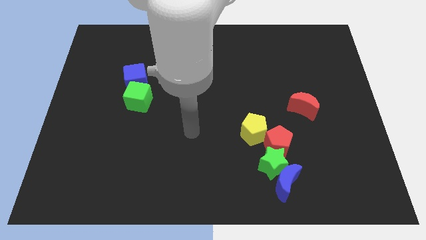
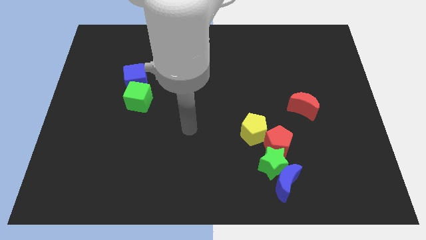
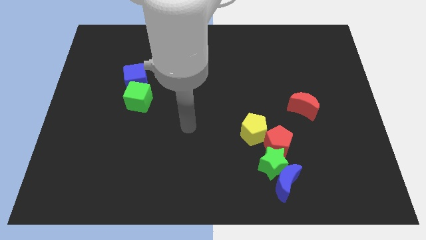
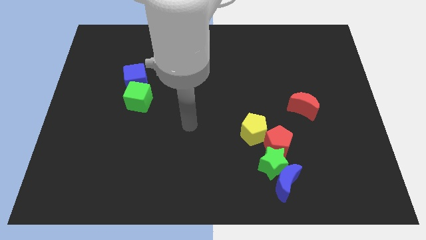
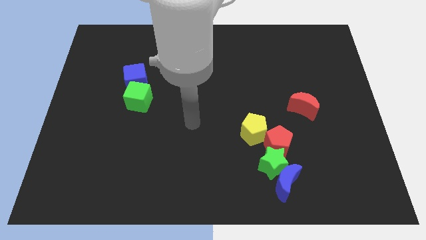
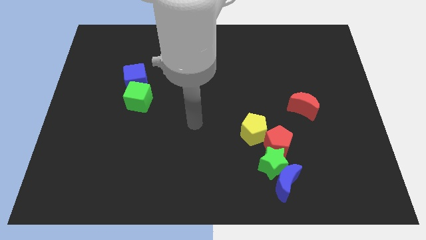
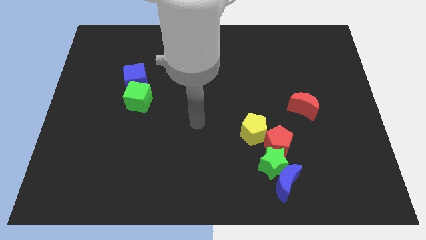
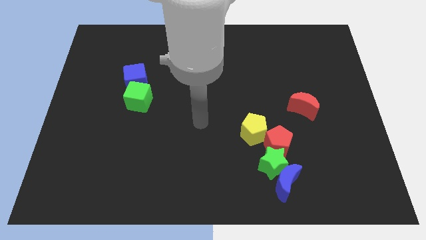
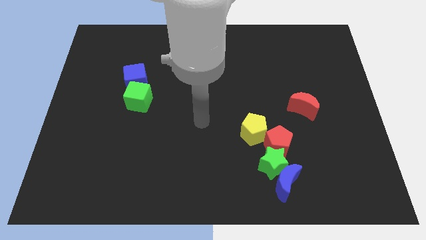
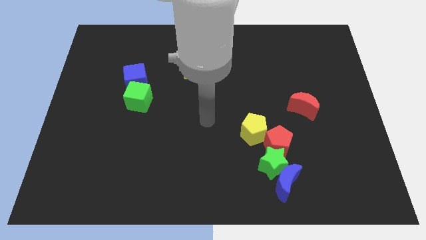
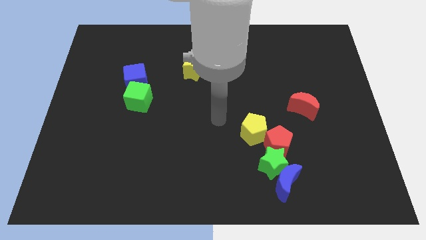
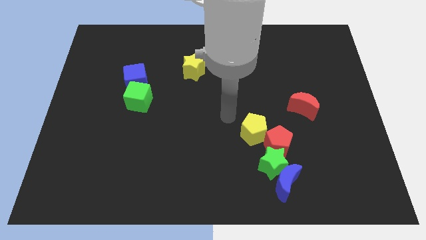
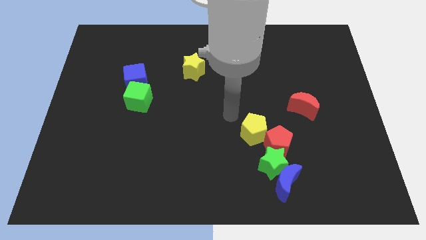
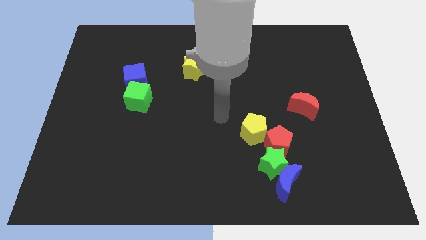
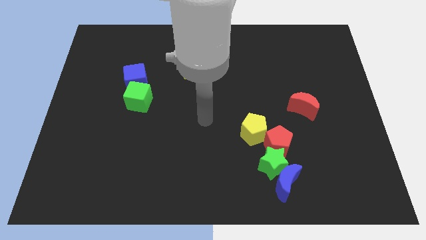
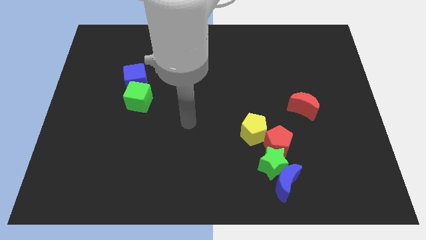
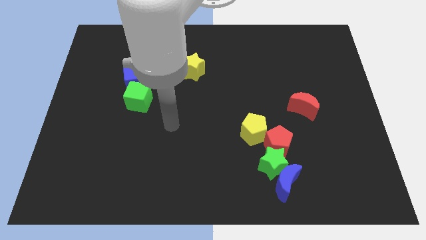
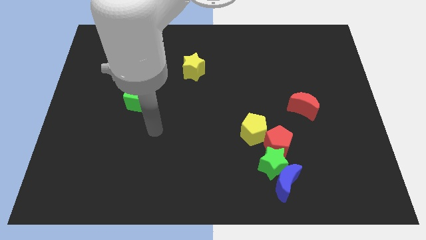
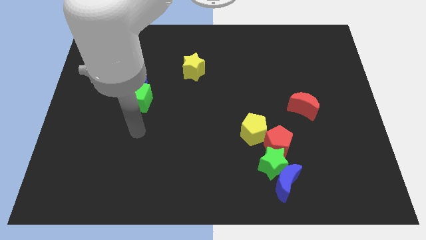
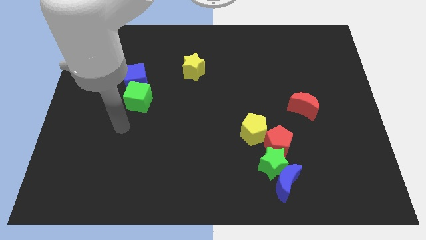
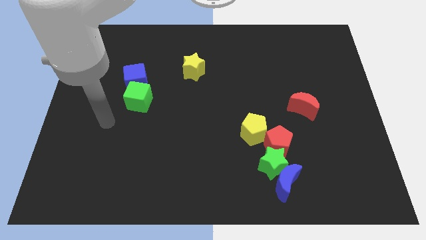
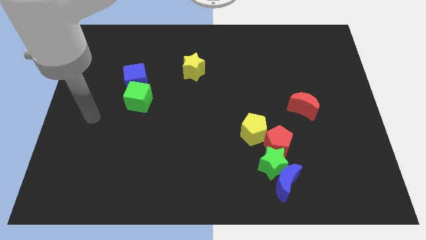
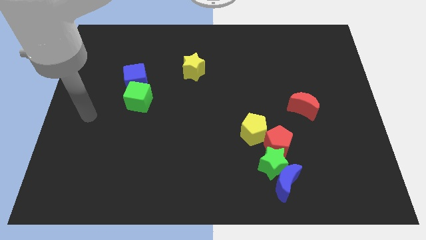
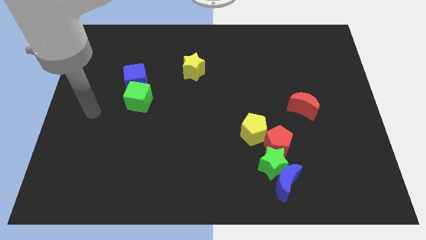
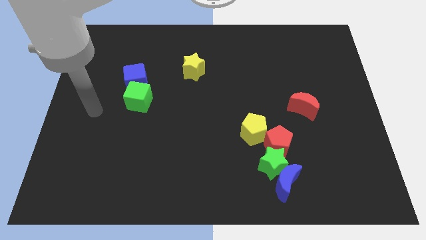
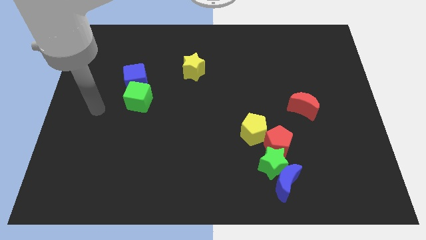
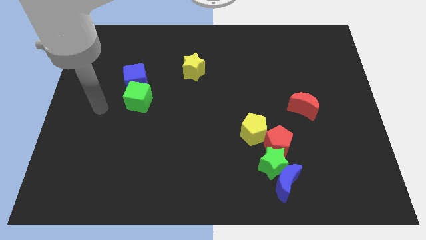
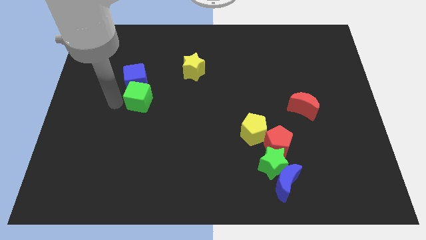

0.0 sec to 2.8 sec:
move your arms towards green cube

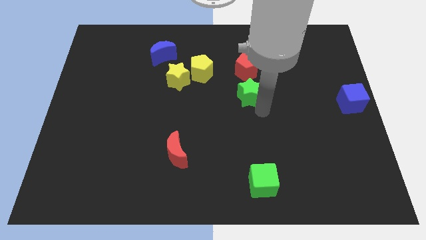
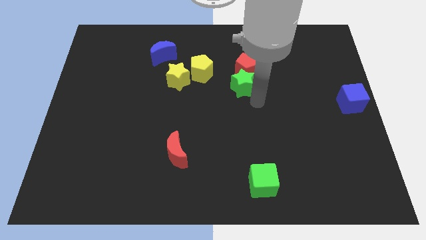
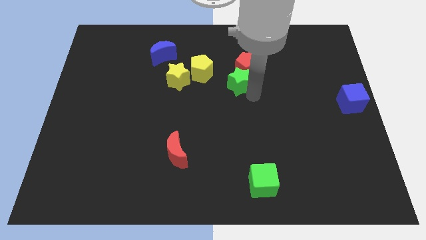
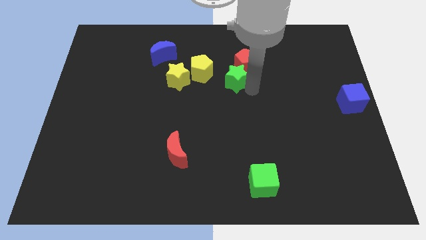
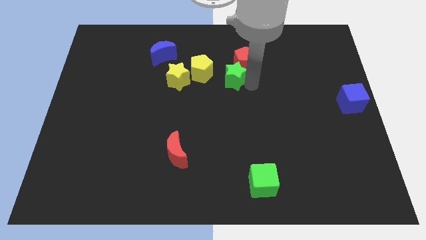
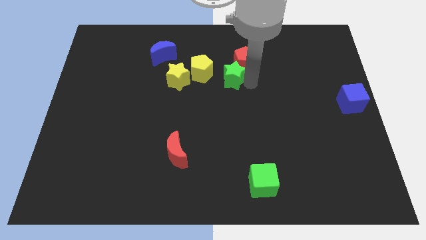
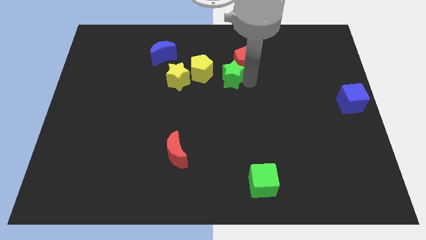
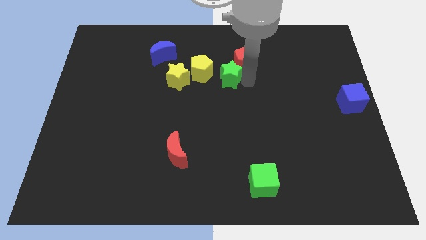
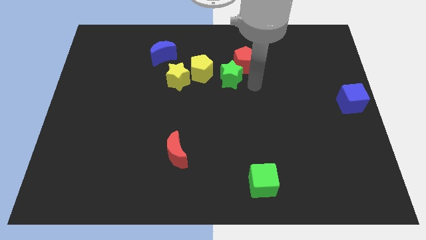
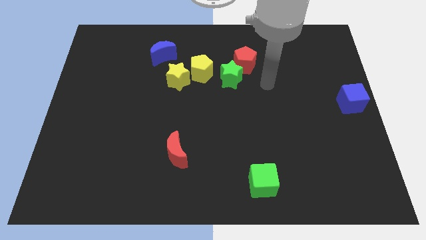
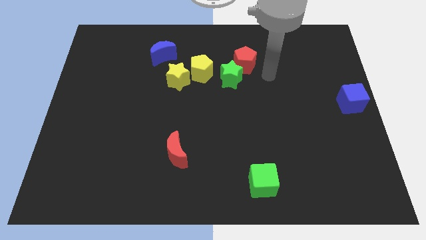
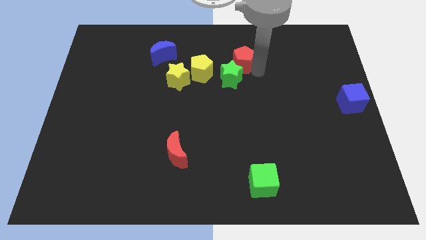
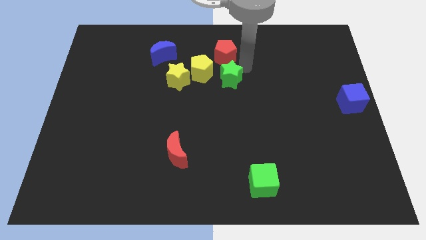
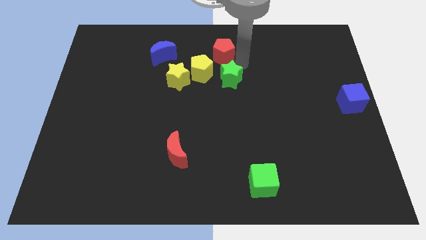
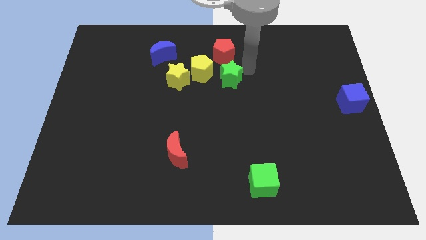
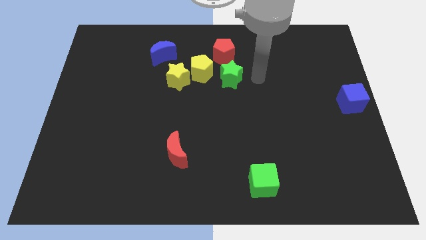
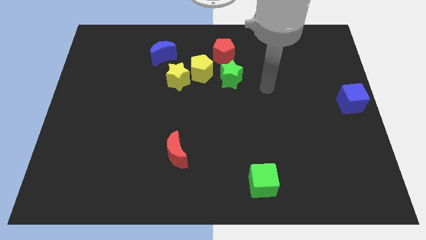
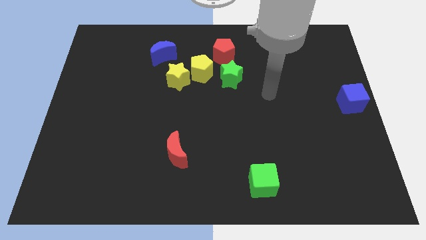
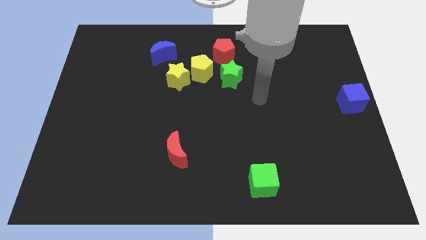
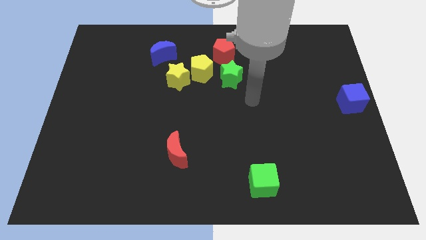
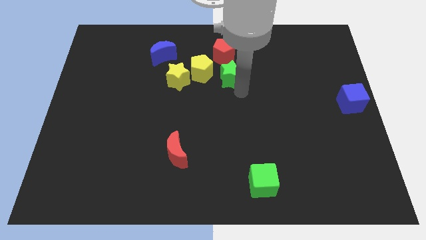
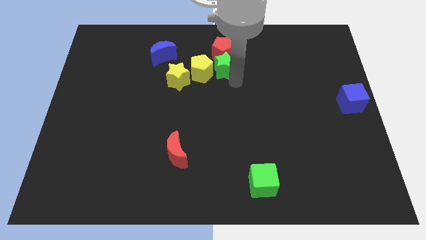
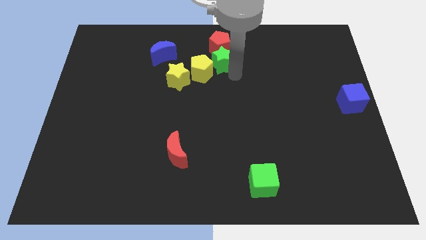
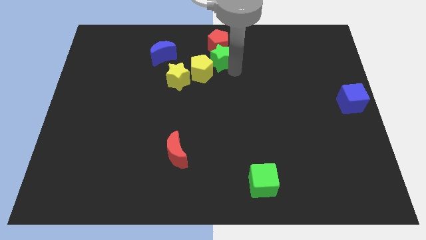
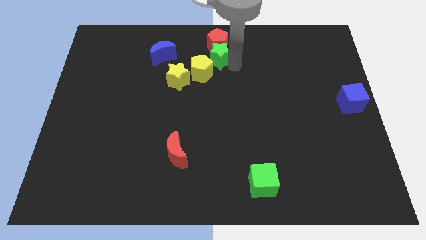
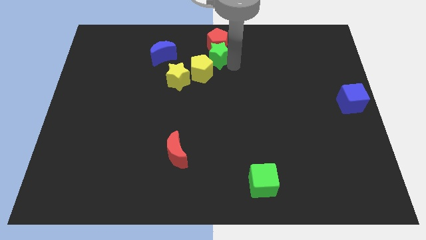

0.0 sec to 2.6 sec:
move green star towards red pentagon

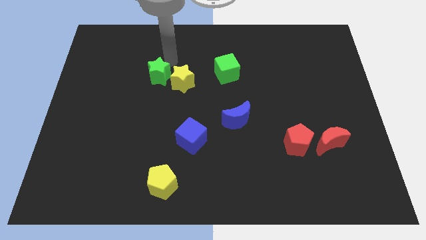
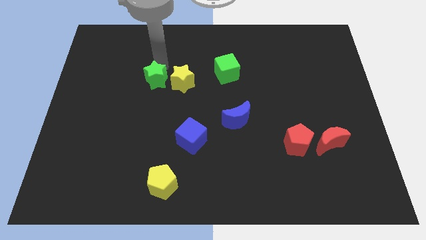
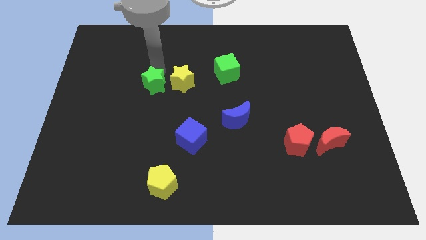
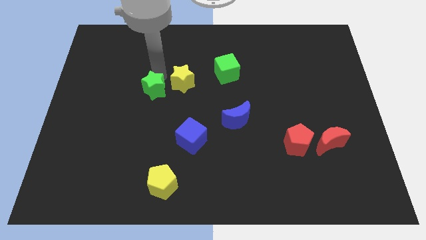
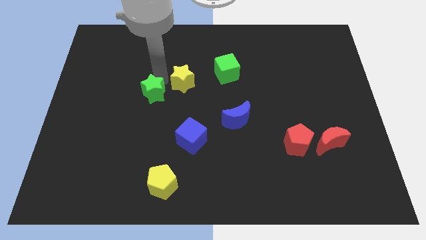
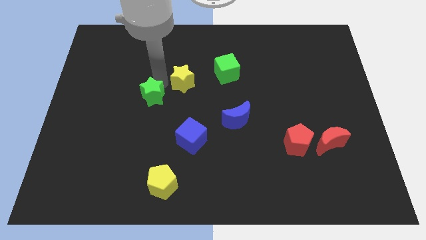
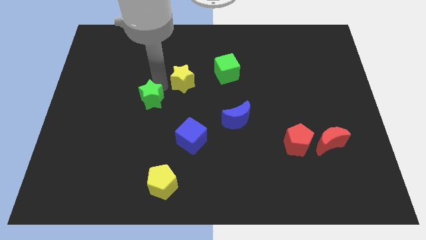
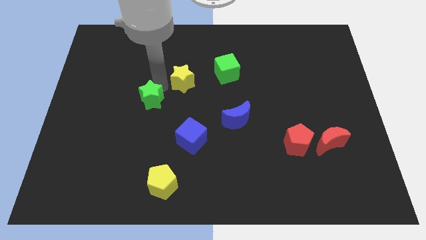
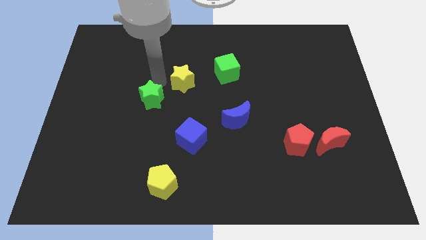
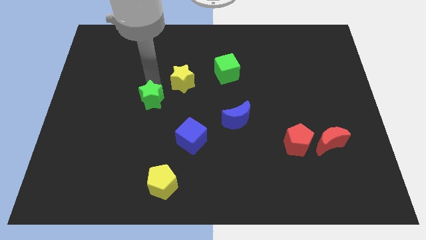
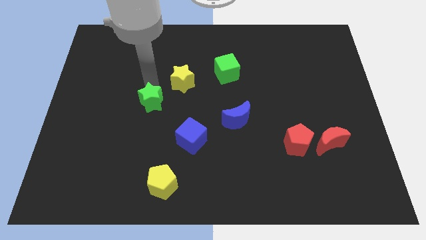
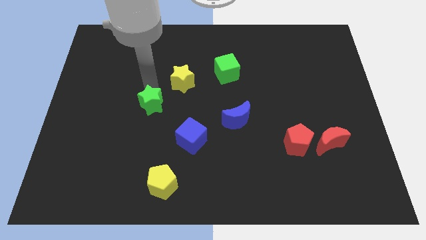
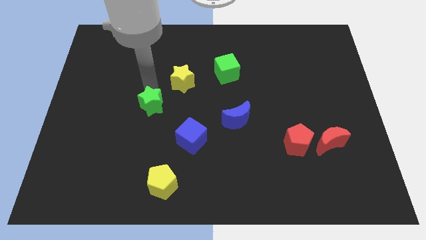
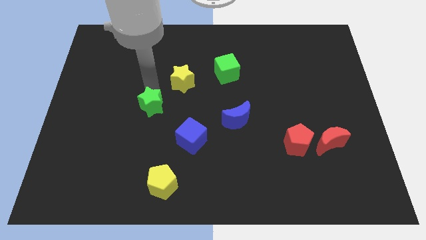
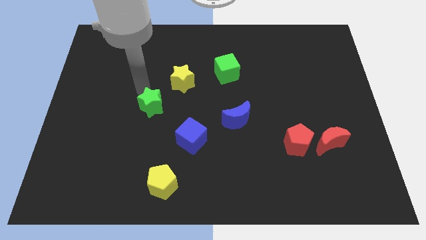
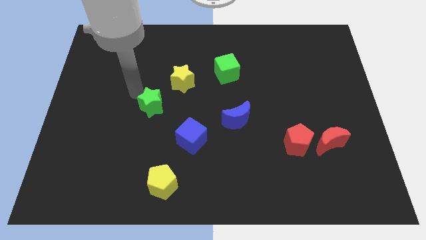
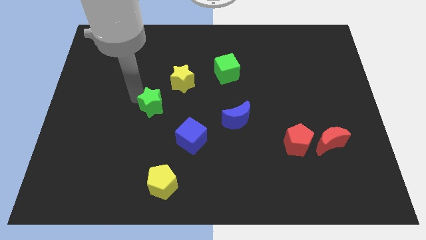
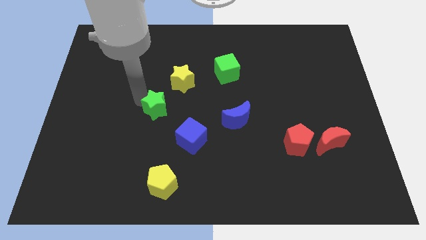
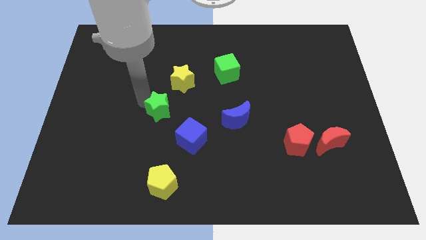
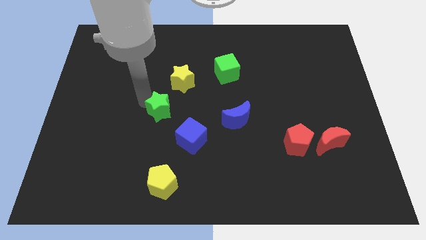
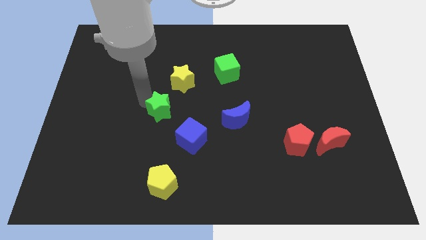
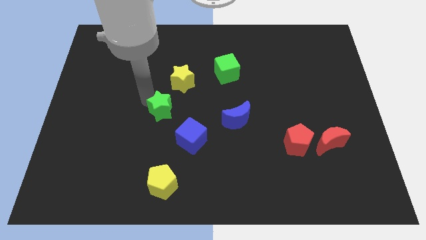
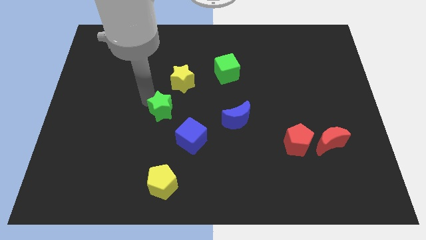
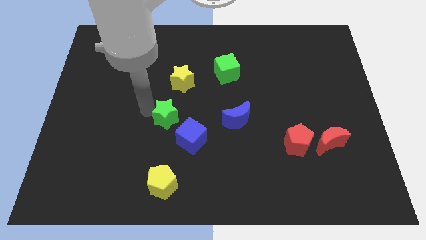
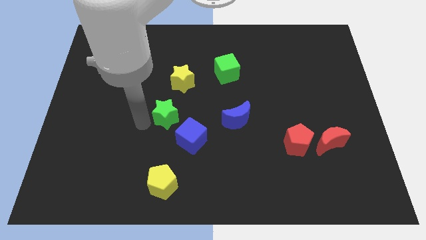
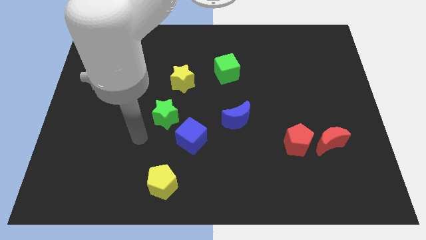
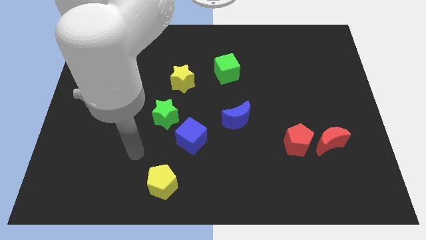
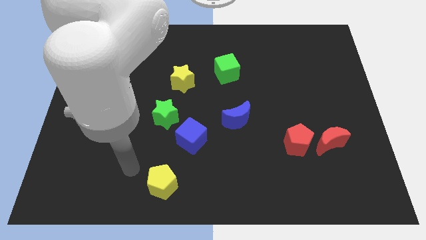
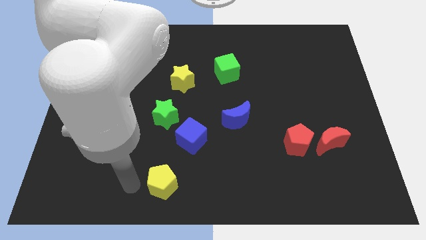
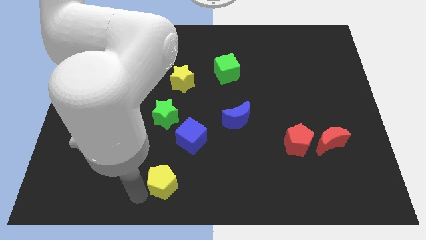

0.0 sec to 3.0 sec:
push the green star away from the yellow star

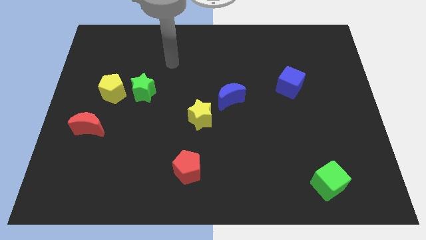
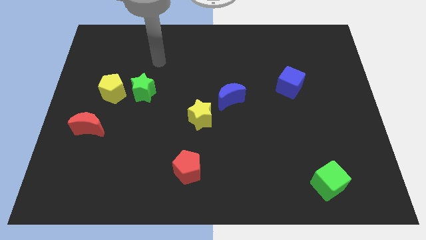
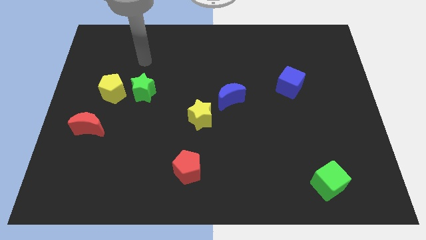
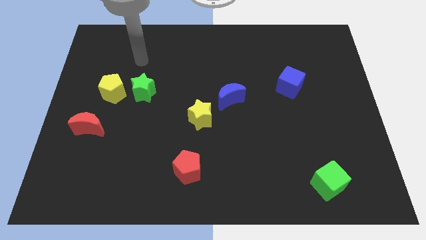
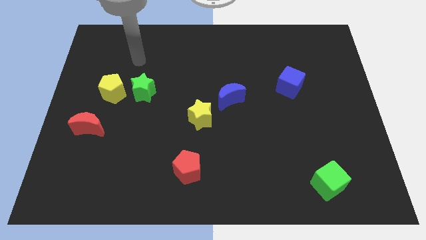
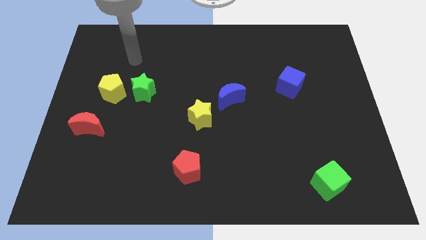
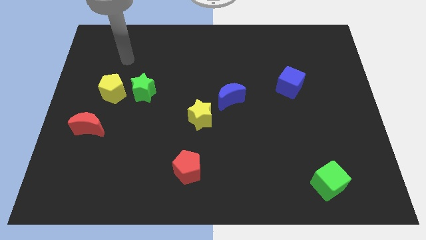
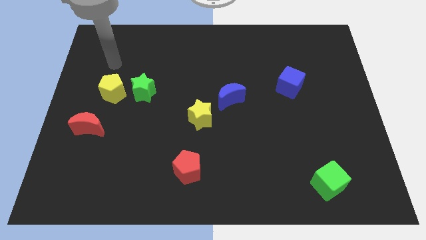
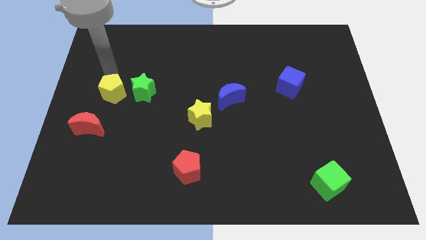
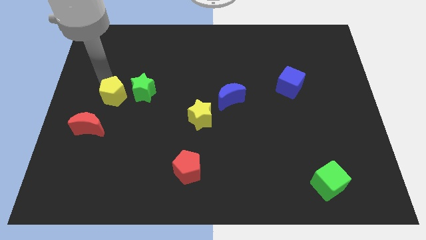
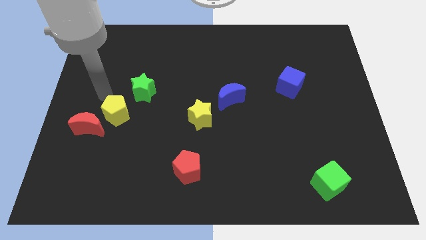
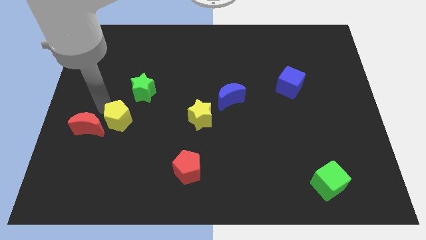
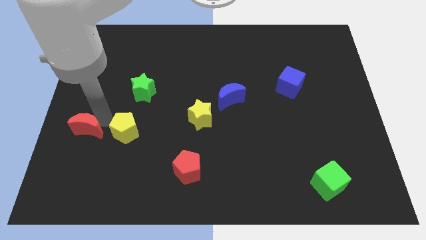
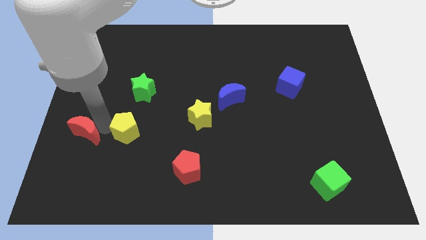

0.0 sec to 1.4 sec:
push the yellow pentagon to the right of the red crescent
